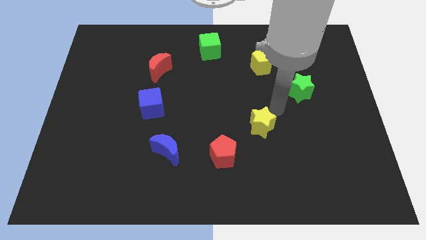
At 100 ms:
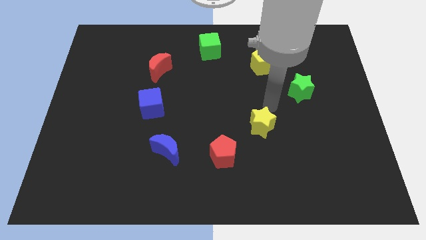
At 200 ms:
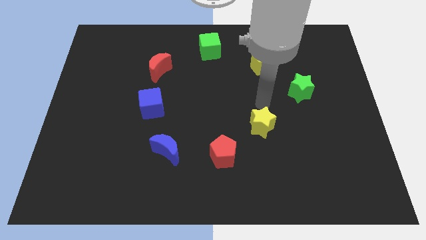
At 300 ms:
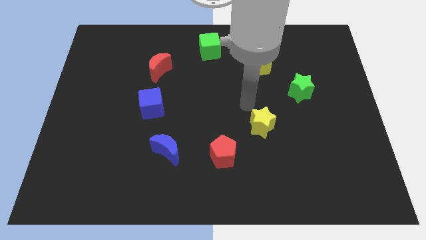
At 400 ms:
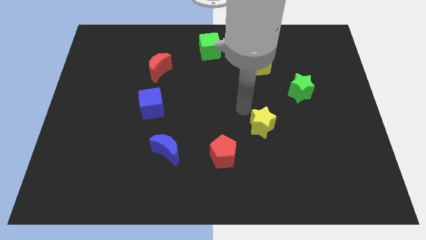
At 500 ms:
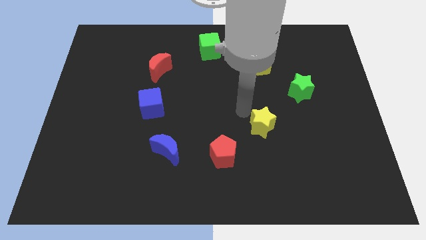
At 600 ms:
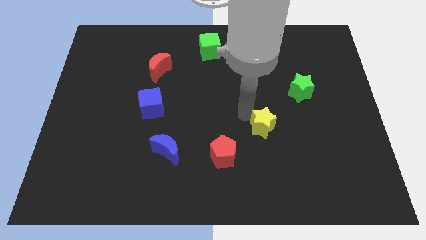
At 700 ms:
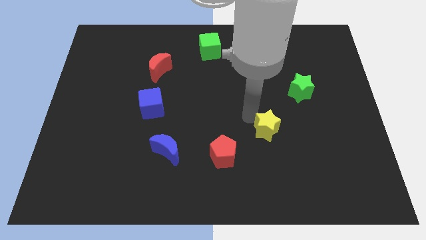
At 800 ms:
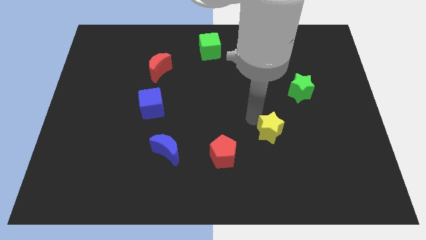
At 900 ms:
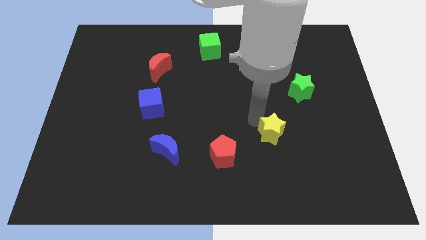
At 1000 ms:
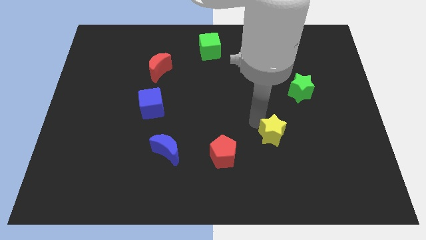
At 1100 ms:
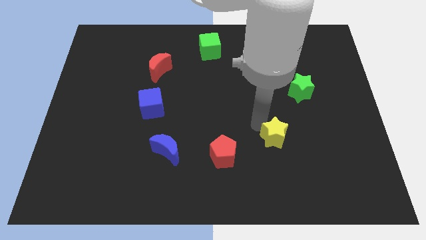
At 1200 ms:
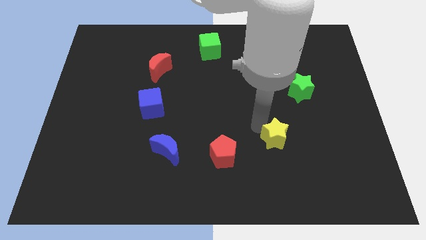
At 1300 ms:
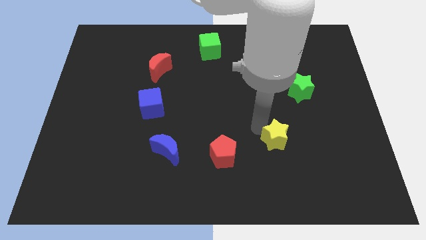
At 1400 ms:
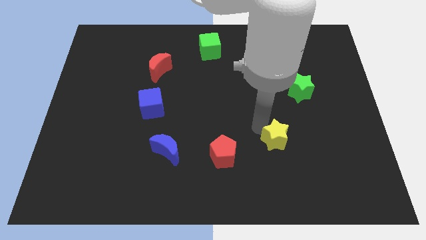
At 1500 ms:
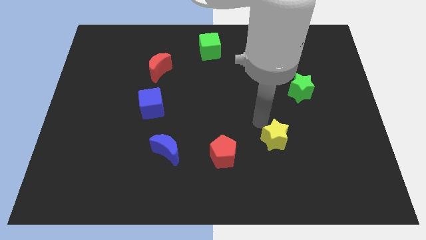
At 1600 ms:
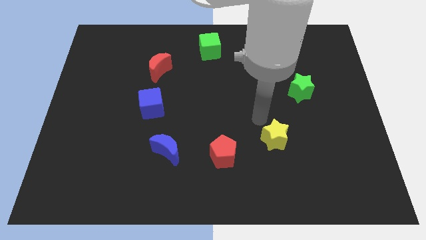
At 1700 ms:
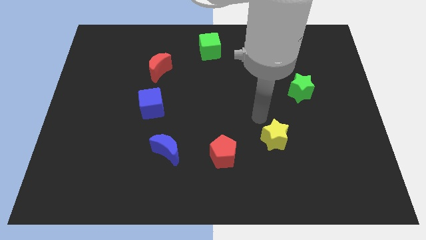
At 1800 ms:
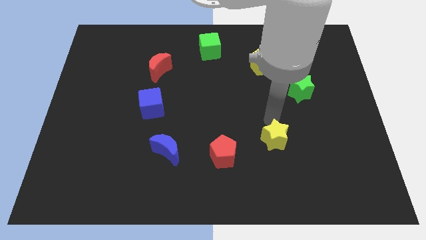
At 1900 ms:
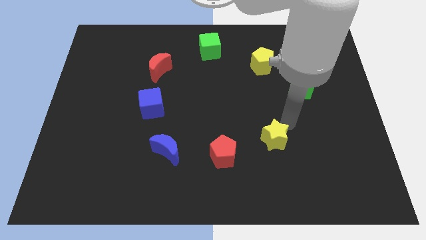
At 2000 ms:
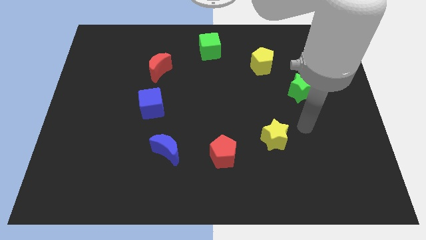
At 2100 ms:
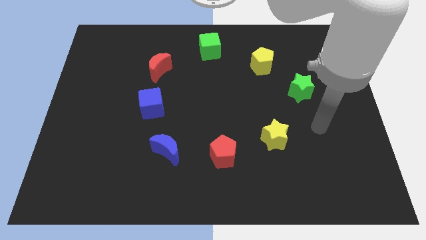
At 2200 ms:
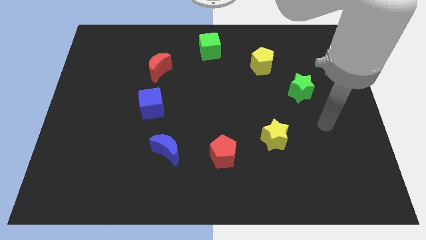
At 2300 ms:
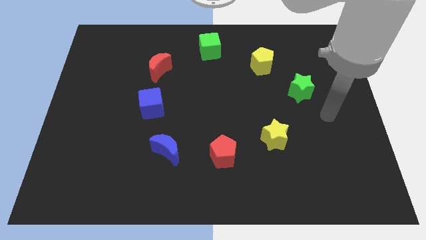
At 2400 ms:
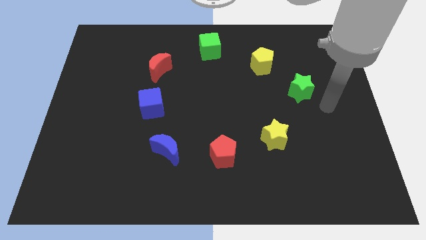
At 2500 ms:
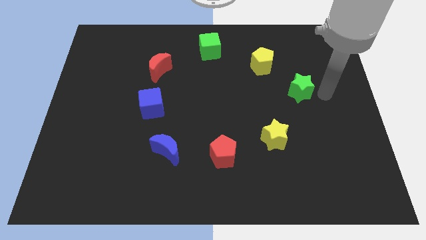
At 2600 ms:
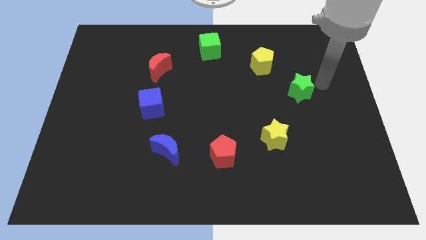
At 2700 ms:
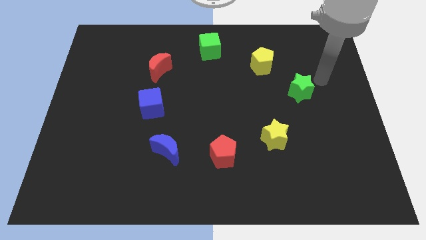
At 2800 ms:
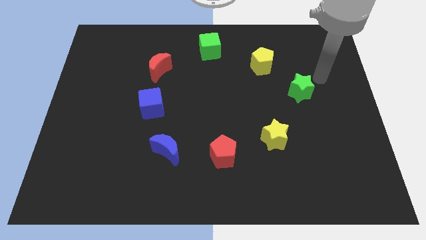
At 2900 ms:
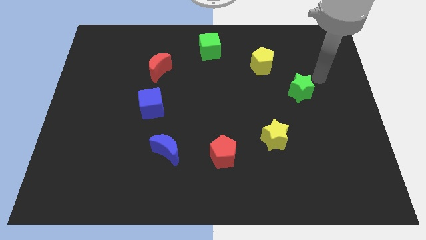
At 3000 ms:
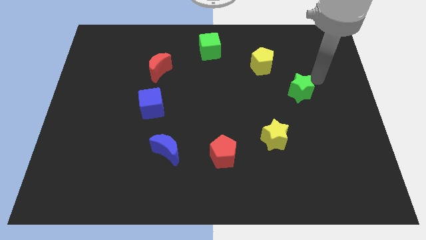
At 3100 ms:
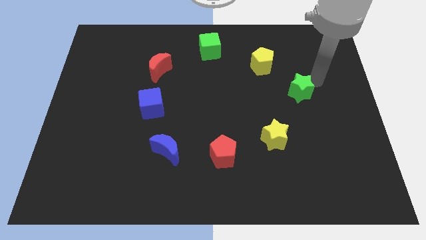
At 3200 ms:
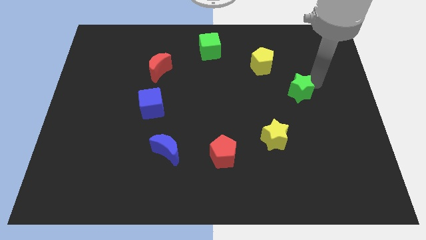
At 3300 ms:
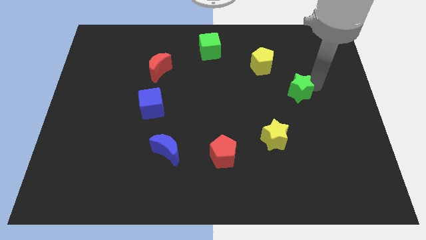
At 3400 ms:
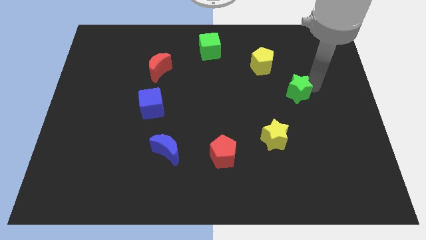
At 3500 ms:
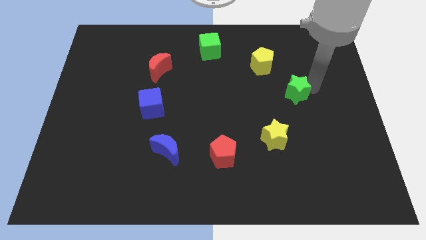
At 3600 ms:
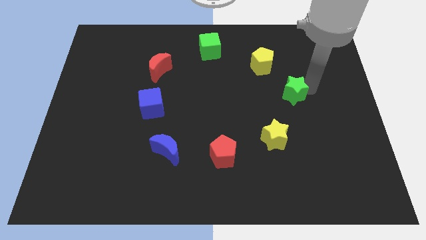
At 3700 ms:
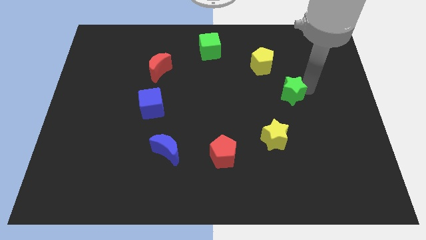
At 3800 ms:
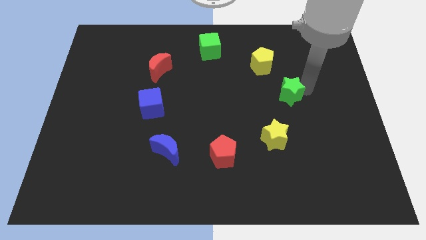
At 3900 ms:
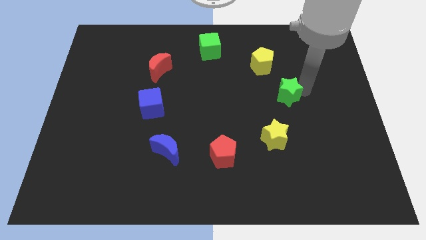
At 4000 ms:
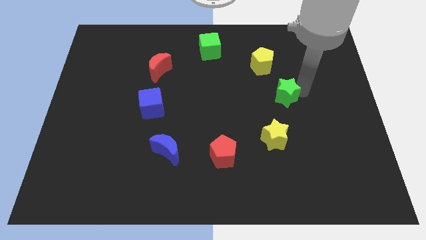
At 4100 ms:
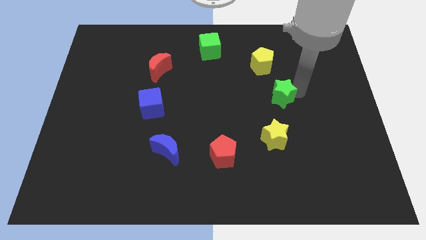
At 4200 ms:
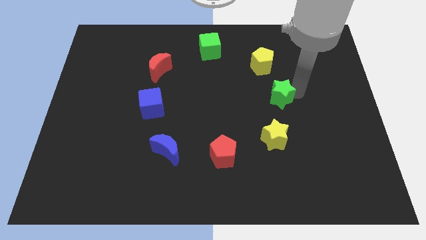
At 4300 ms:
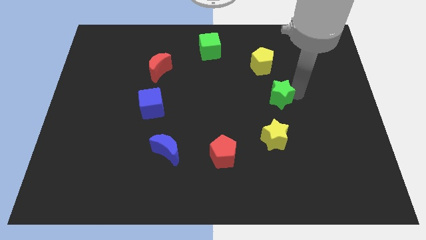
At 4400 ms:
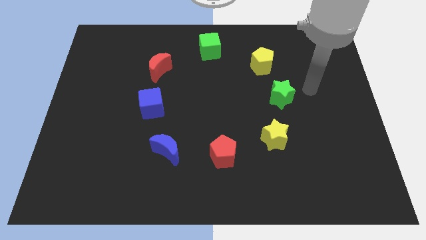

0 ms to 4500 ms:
push the green star slightly dtowards the center to form a circle

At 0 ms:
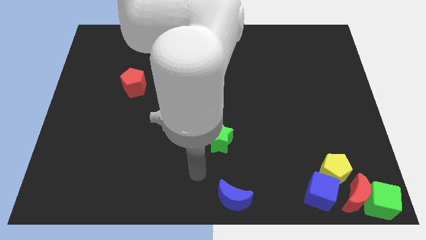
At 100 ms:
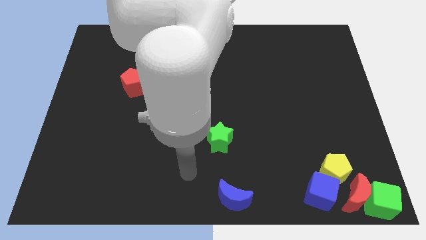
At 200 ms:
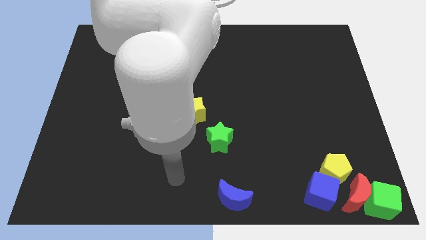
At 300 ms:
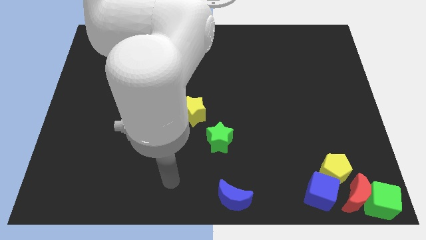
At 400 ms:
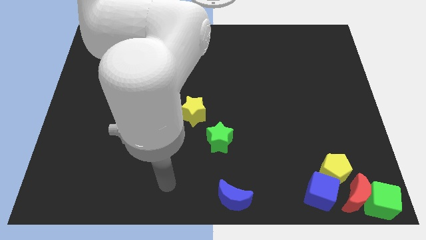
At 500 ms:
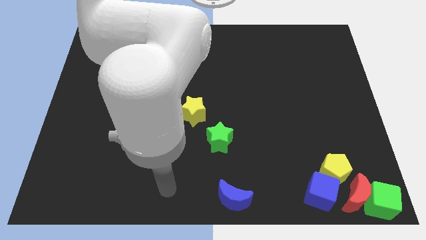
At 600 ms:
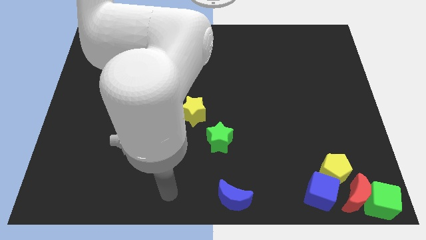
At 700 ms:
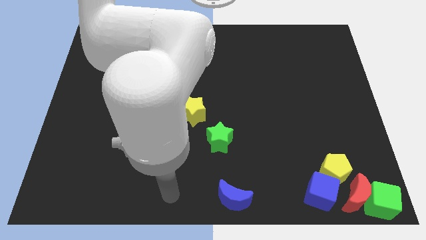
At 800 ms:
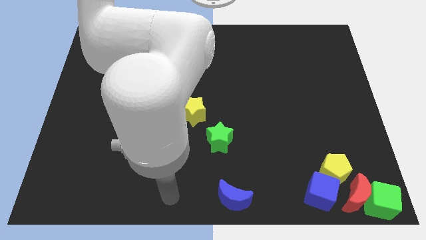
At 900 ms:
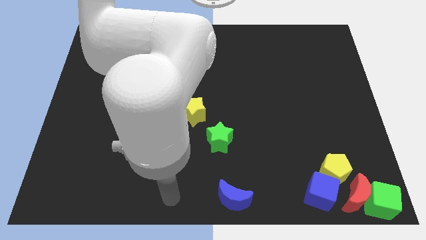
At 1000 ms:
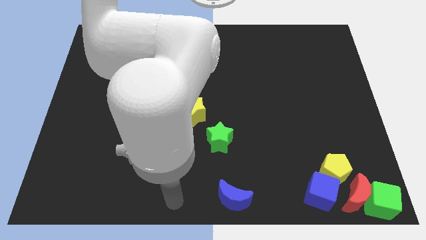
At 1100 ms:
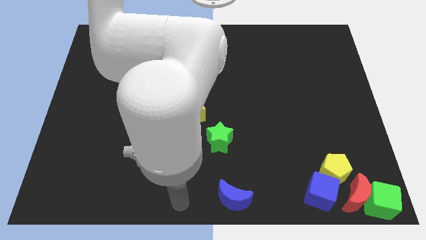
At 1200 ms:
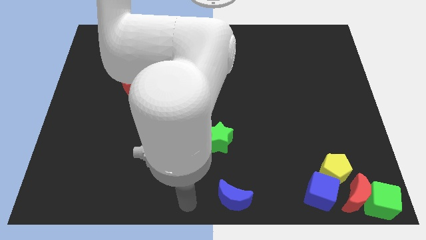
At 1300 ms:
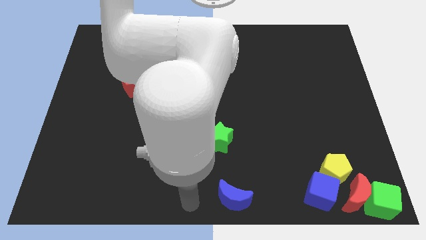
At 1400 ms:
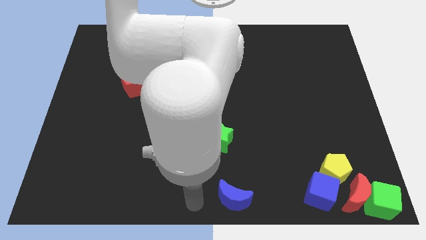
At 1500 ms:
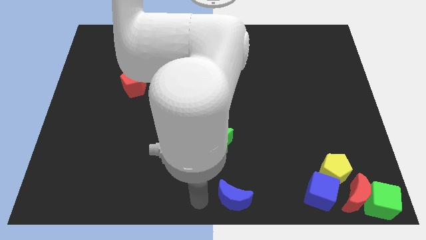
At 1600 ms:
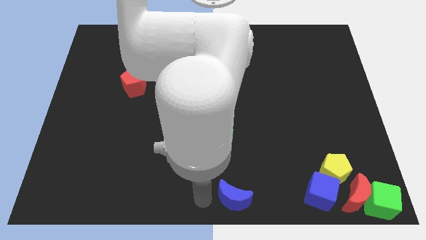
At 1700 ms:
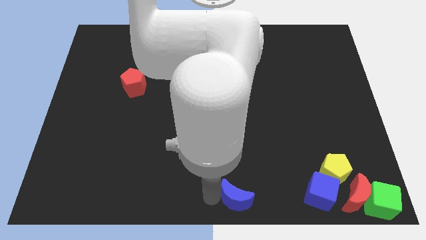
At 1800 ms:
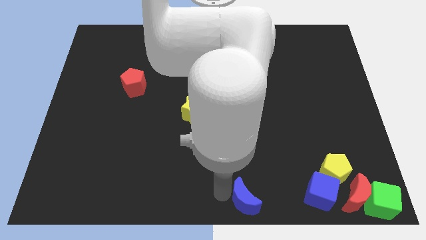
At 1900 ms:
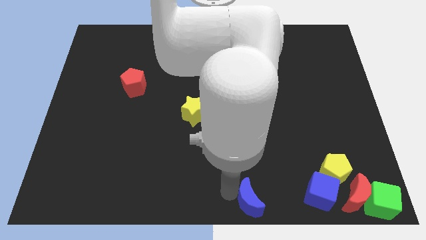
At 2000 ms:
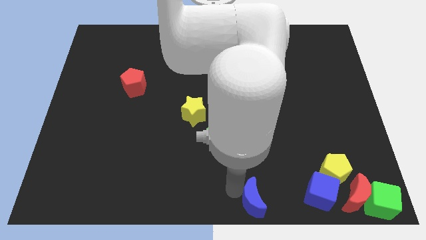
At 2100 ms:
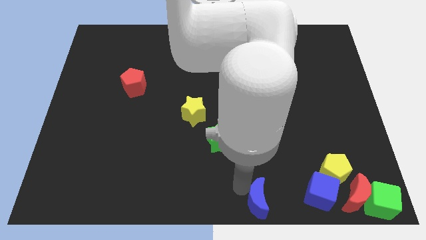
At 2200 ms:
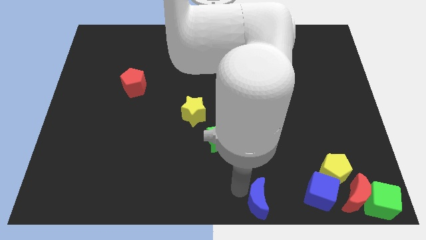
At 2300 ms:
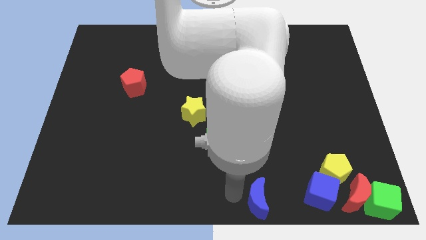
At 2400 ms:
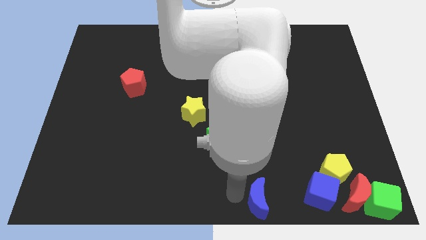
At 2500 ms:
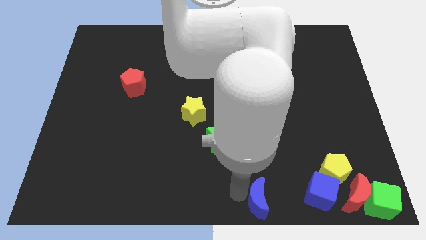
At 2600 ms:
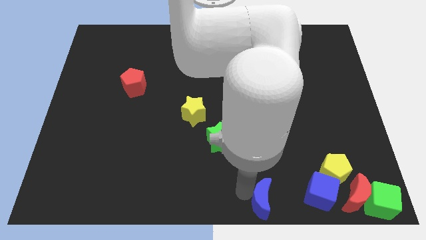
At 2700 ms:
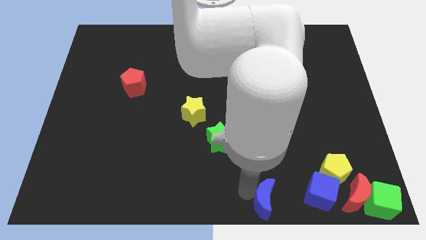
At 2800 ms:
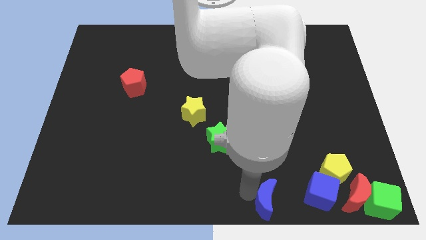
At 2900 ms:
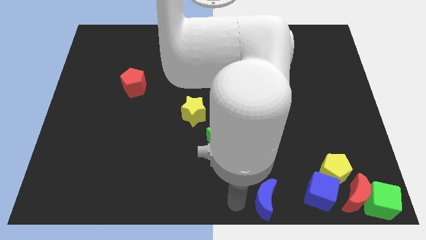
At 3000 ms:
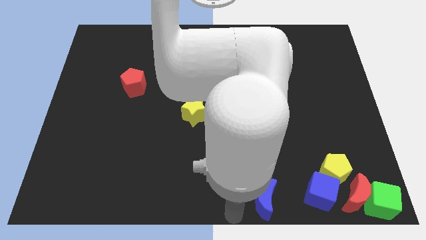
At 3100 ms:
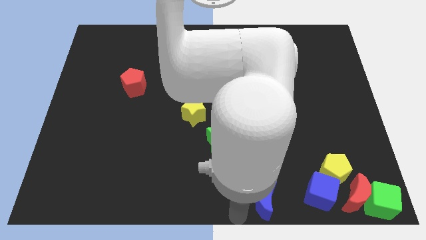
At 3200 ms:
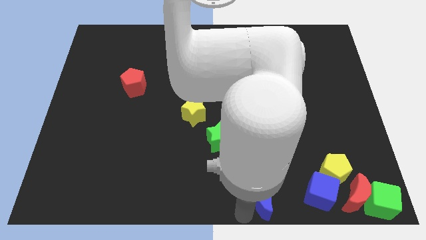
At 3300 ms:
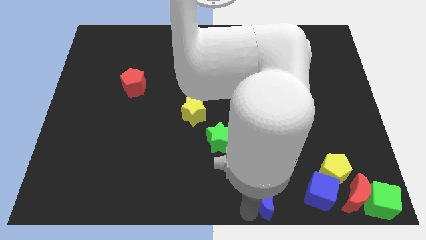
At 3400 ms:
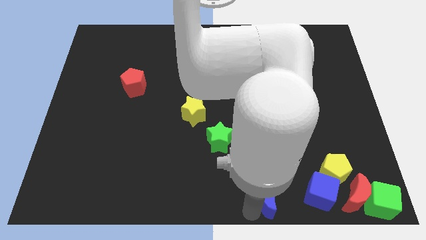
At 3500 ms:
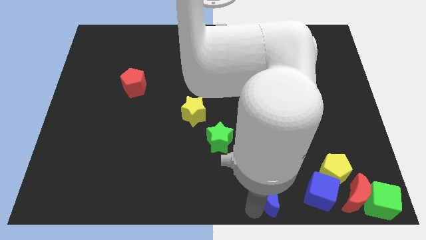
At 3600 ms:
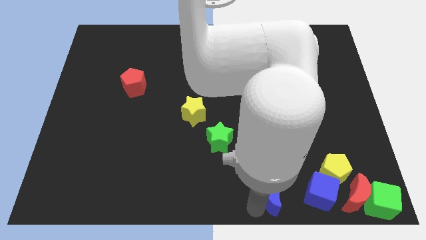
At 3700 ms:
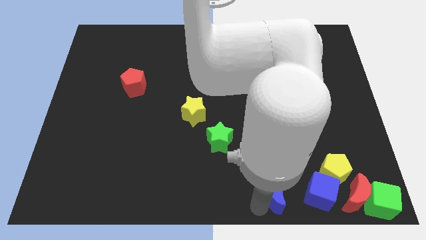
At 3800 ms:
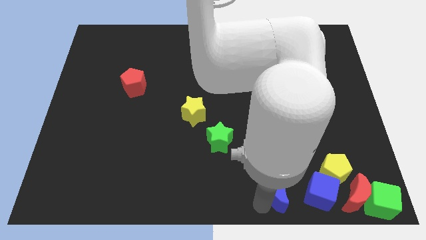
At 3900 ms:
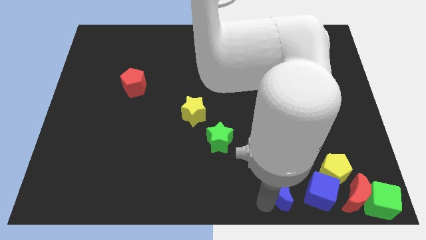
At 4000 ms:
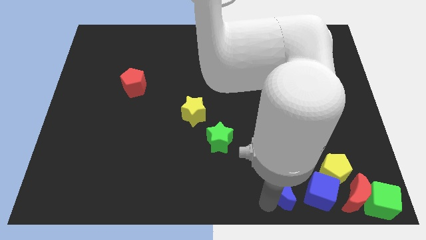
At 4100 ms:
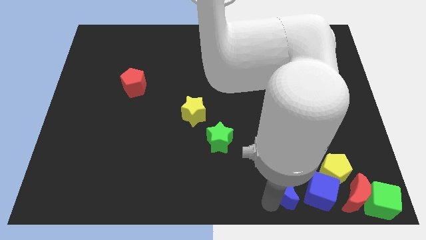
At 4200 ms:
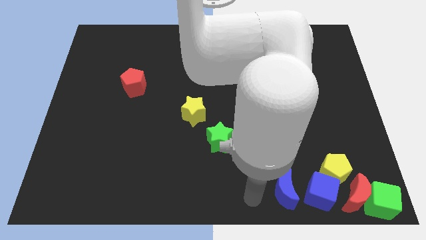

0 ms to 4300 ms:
drag the blue moon towards the left side of the blue cube

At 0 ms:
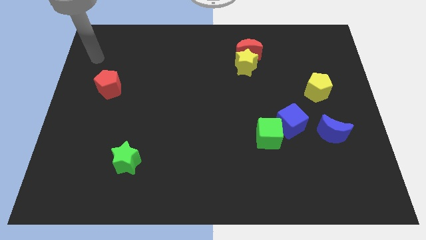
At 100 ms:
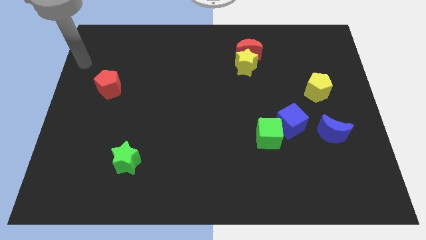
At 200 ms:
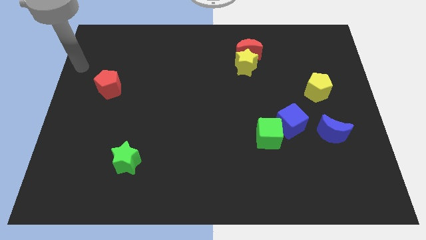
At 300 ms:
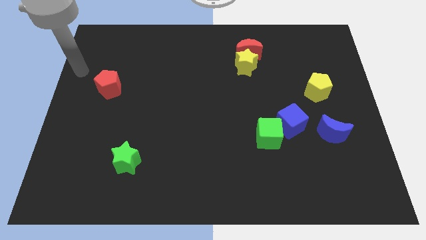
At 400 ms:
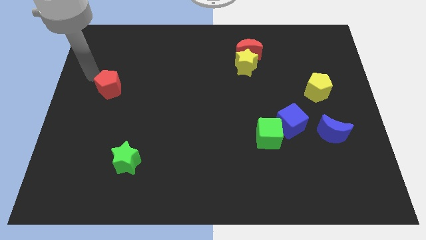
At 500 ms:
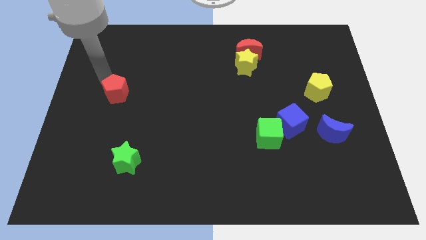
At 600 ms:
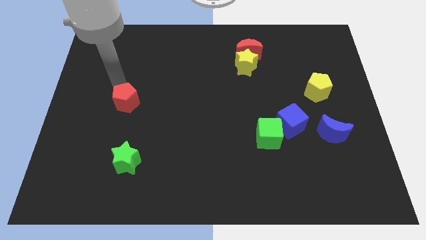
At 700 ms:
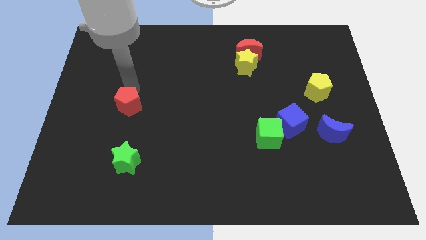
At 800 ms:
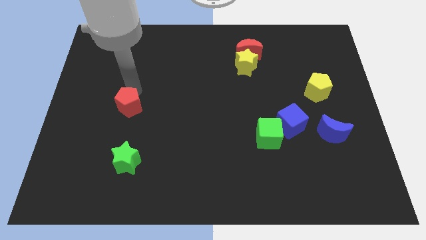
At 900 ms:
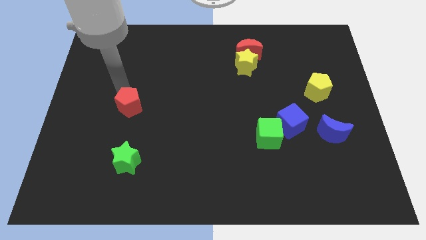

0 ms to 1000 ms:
move the red pentagon above the green star
